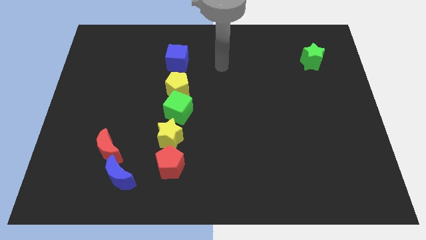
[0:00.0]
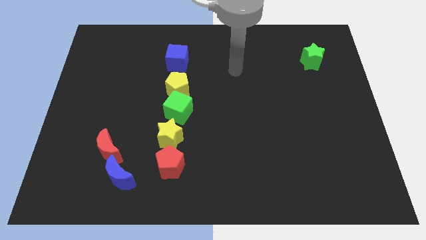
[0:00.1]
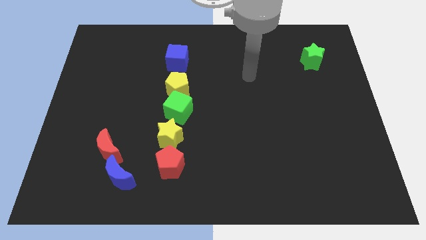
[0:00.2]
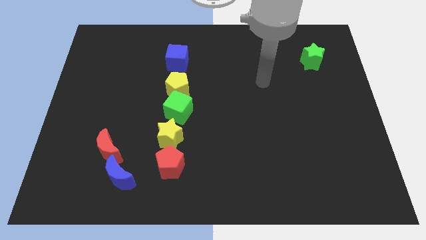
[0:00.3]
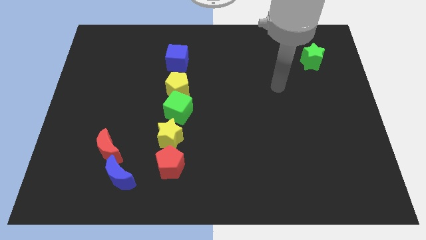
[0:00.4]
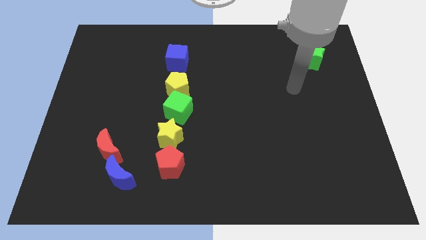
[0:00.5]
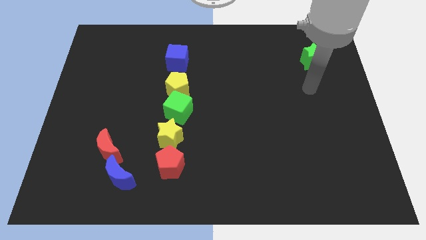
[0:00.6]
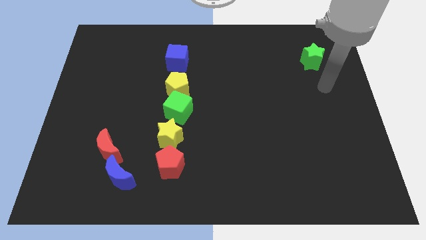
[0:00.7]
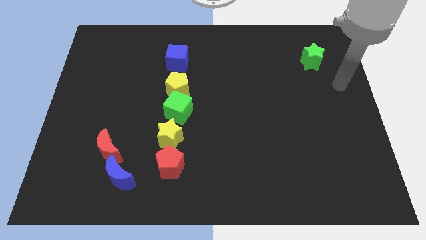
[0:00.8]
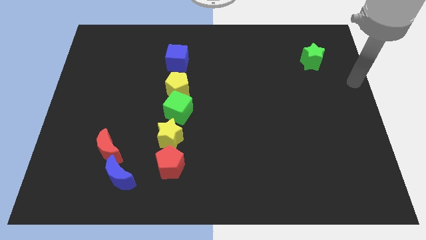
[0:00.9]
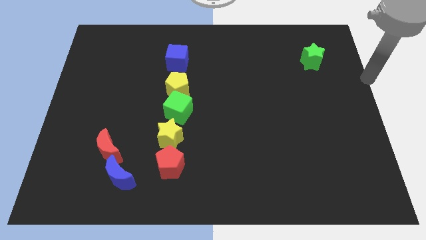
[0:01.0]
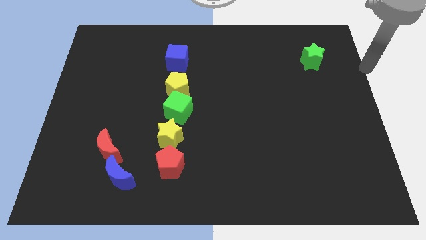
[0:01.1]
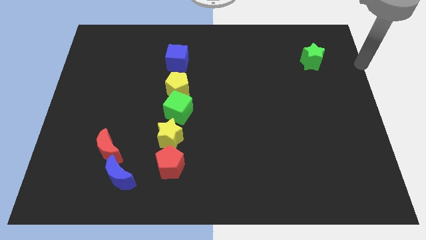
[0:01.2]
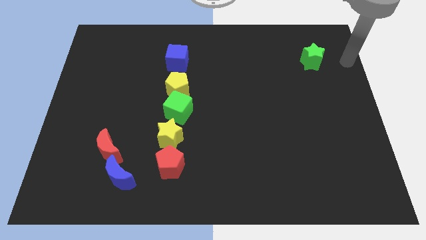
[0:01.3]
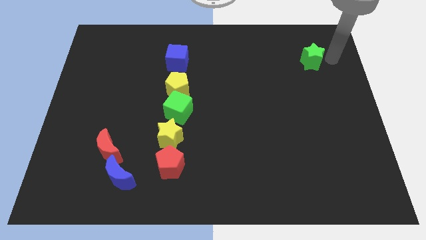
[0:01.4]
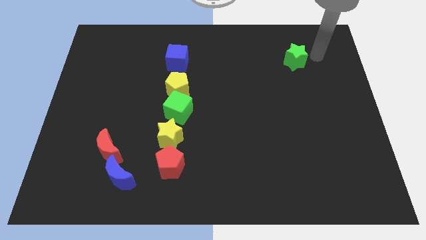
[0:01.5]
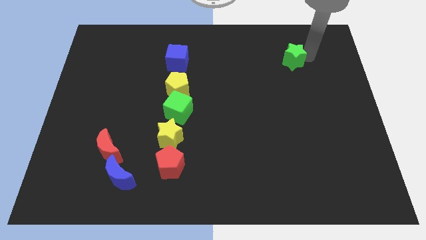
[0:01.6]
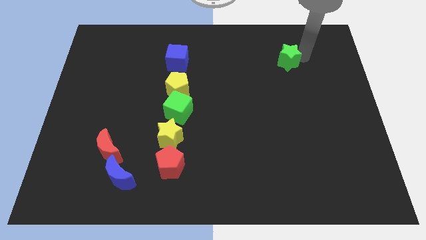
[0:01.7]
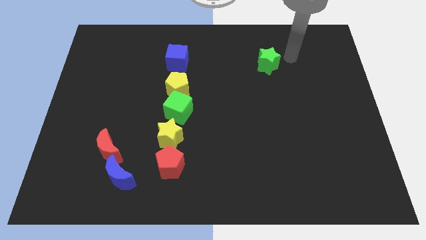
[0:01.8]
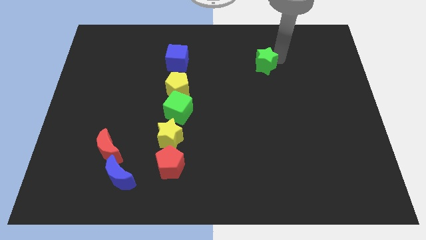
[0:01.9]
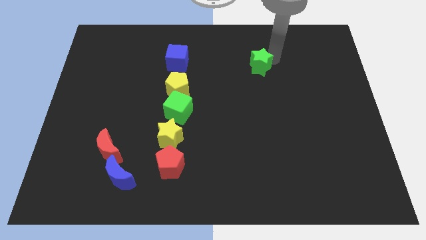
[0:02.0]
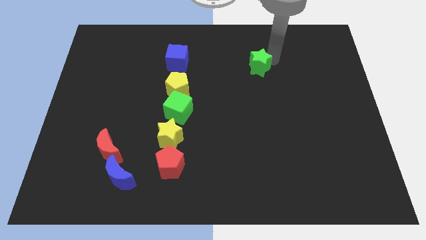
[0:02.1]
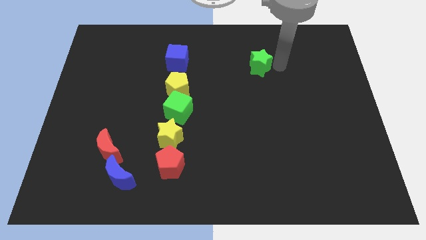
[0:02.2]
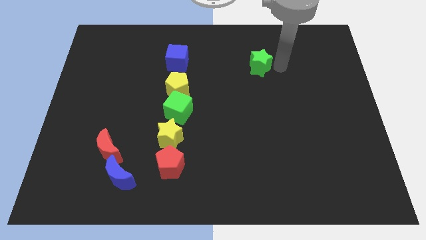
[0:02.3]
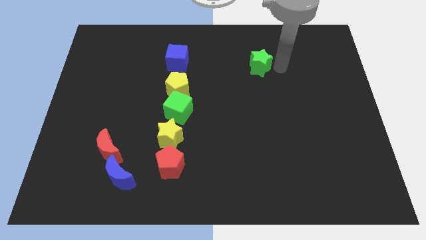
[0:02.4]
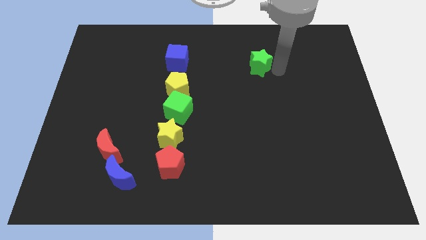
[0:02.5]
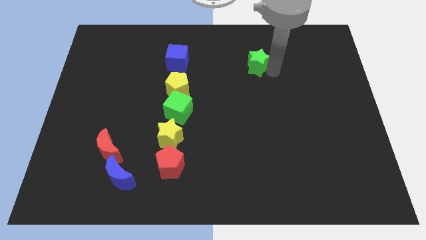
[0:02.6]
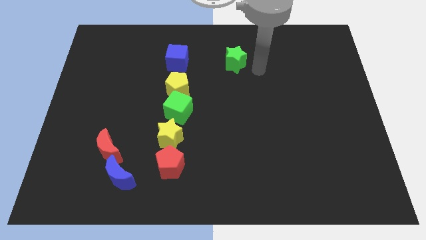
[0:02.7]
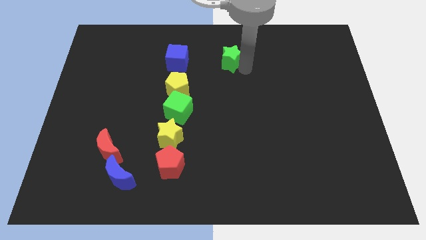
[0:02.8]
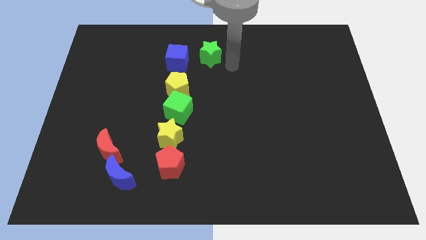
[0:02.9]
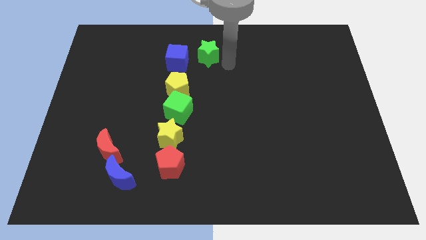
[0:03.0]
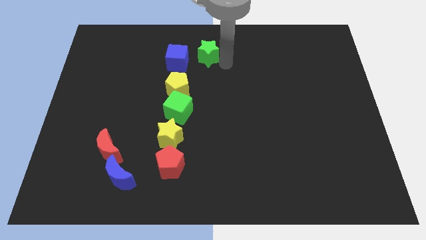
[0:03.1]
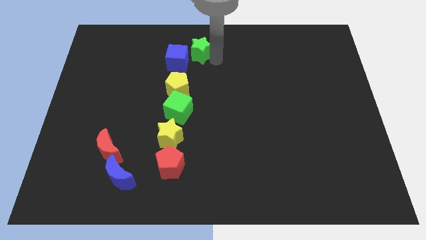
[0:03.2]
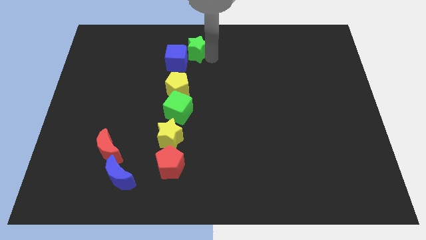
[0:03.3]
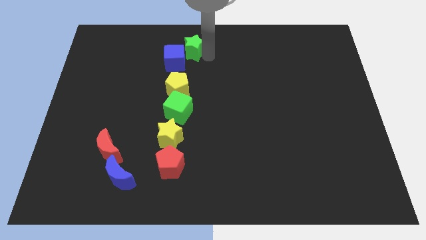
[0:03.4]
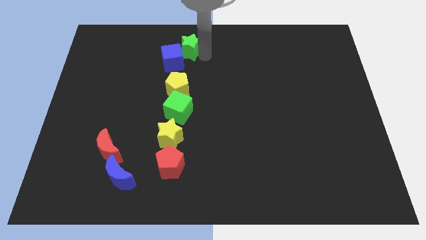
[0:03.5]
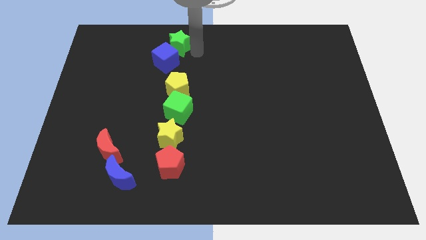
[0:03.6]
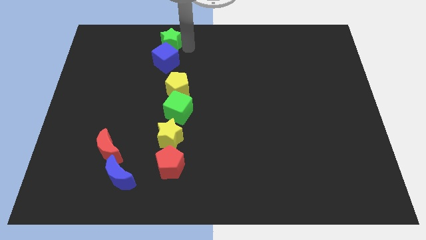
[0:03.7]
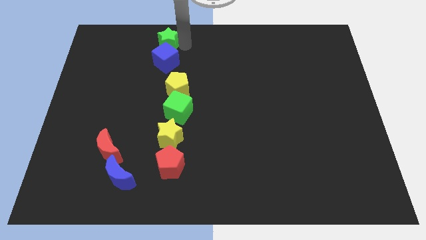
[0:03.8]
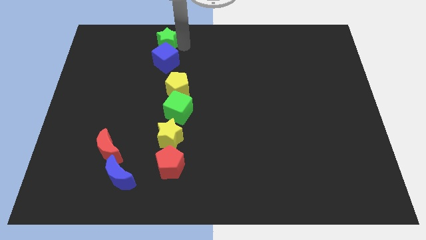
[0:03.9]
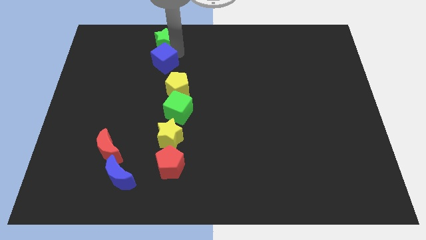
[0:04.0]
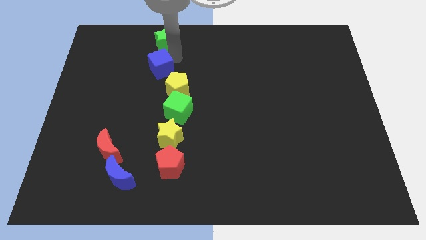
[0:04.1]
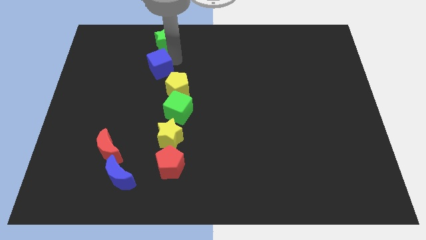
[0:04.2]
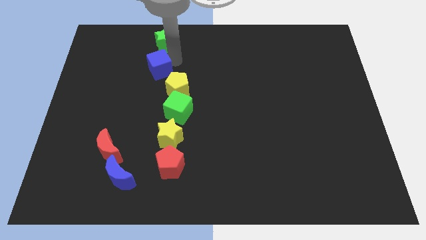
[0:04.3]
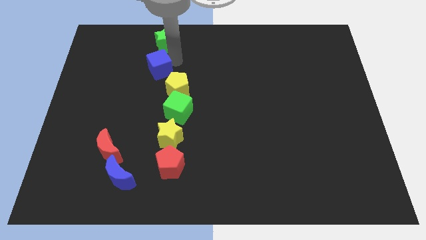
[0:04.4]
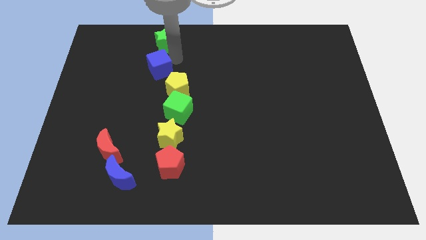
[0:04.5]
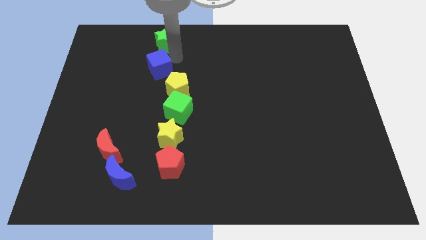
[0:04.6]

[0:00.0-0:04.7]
place the green star above the blue cube

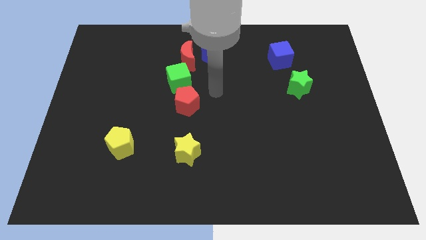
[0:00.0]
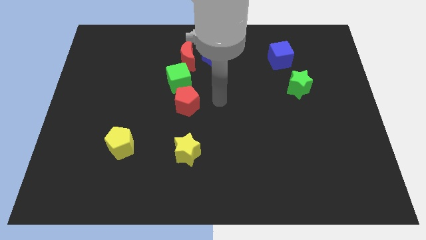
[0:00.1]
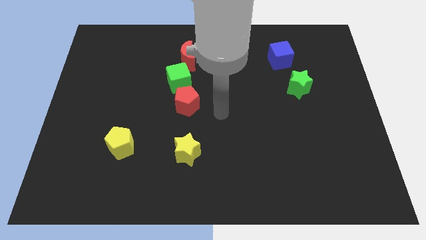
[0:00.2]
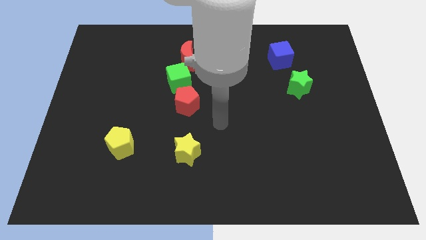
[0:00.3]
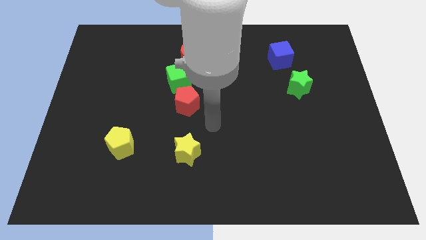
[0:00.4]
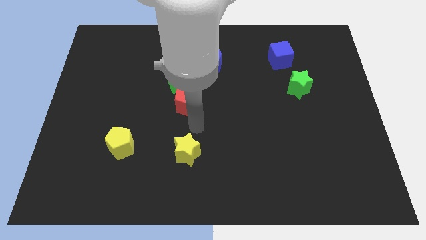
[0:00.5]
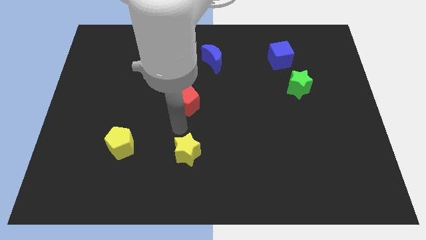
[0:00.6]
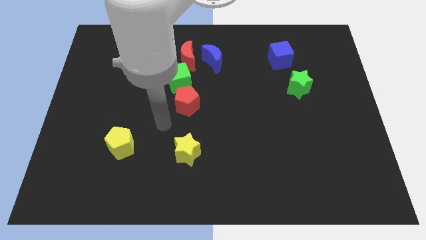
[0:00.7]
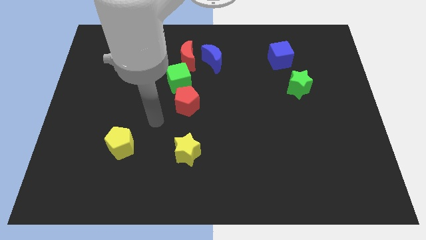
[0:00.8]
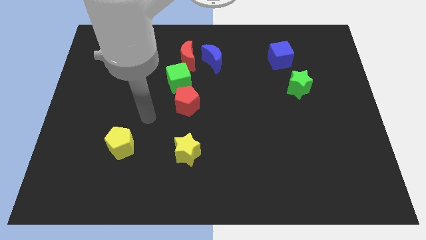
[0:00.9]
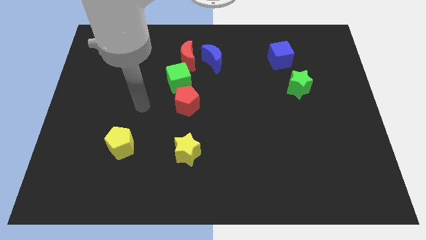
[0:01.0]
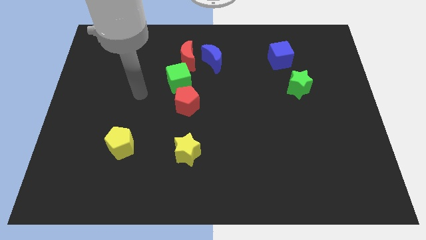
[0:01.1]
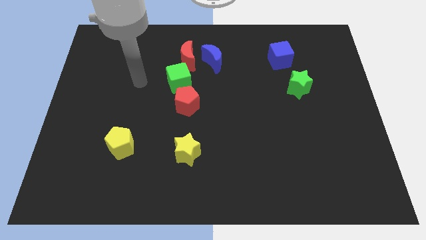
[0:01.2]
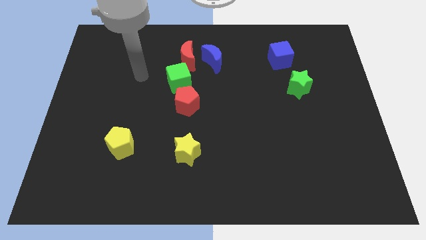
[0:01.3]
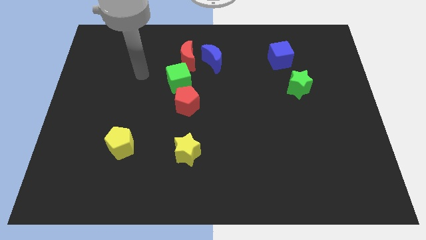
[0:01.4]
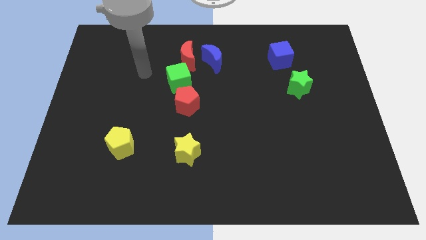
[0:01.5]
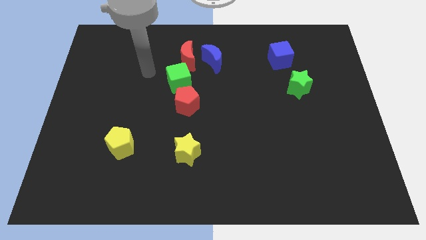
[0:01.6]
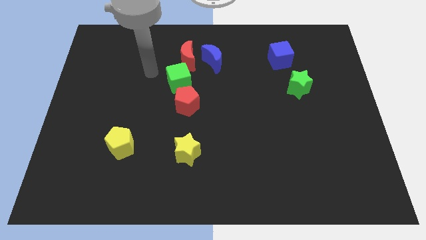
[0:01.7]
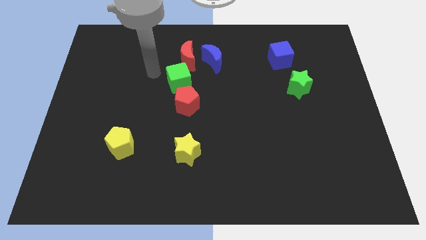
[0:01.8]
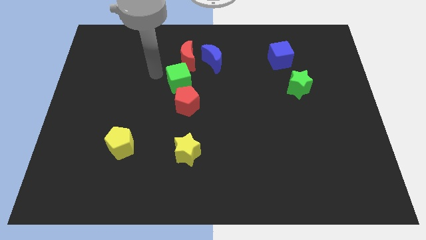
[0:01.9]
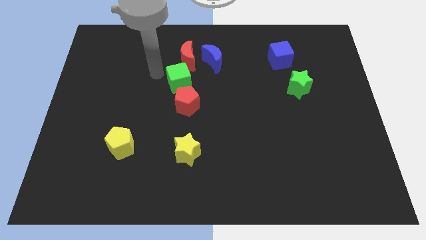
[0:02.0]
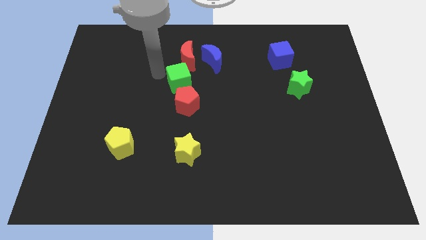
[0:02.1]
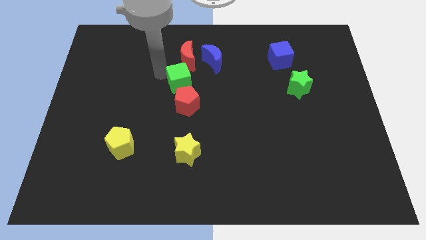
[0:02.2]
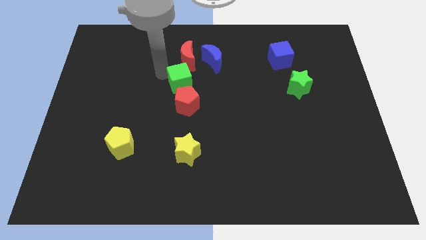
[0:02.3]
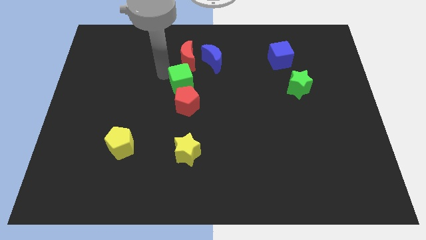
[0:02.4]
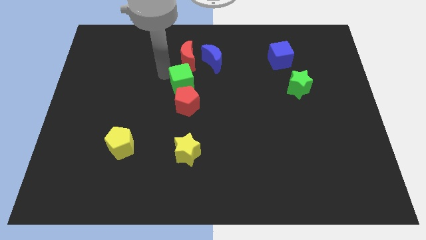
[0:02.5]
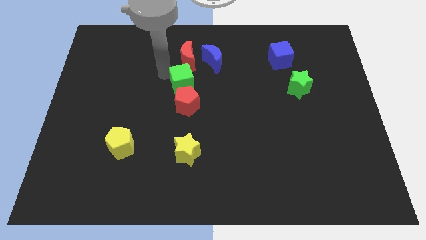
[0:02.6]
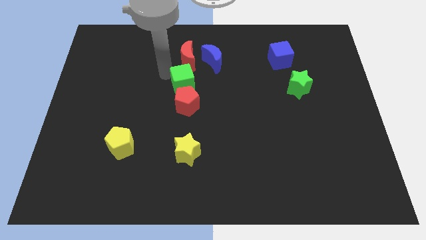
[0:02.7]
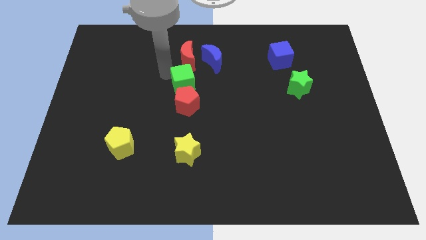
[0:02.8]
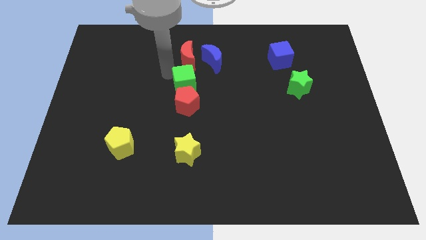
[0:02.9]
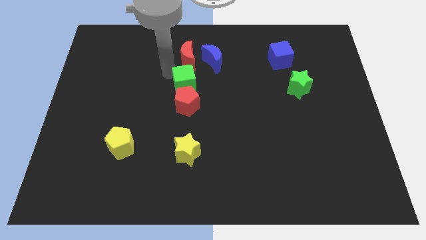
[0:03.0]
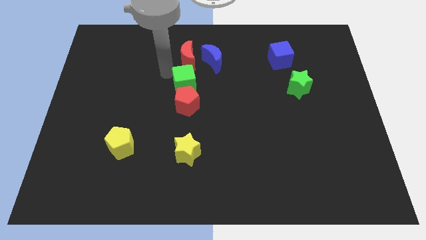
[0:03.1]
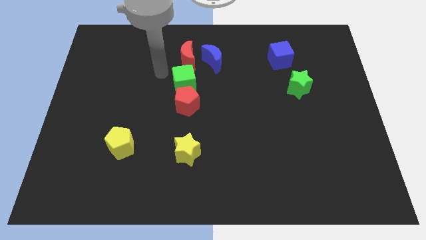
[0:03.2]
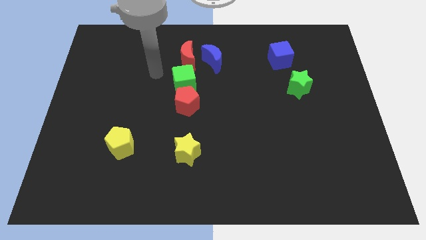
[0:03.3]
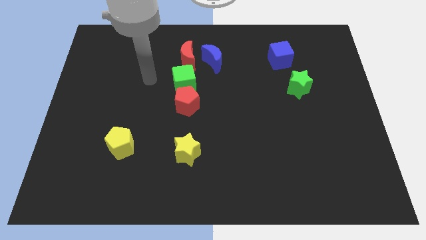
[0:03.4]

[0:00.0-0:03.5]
push the green cube in between the red pentagon and red crescent

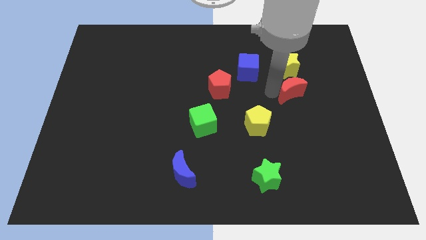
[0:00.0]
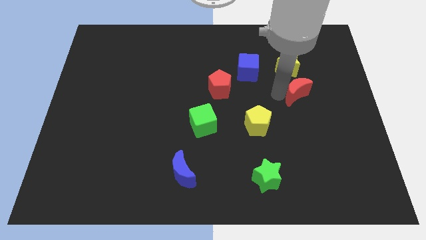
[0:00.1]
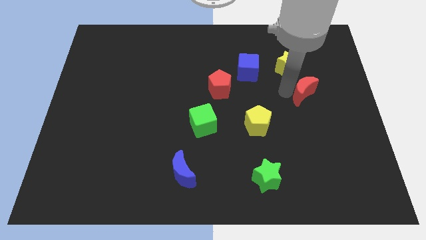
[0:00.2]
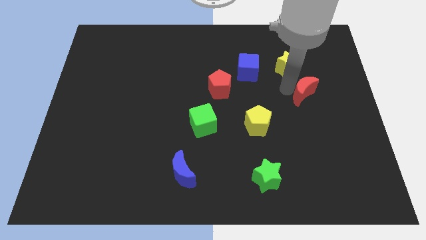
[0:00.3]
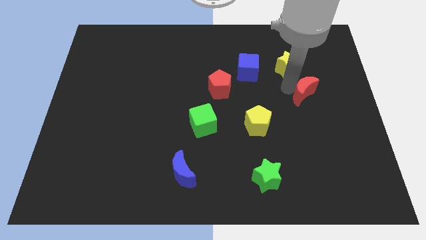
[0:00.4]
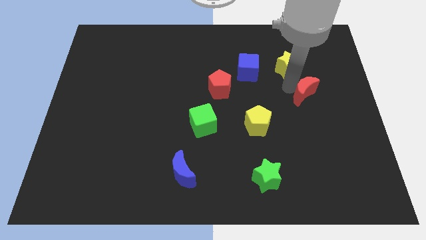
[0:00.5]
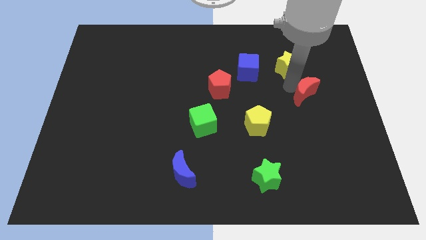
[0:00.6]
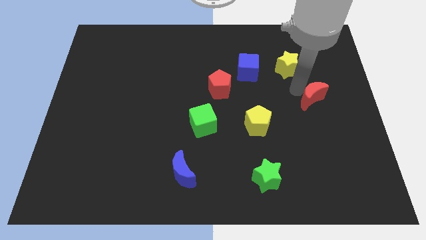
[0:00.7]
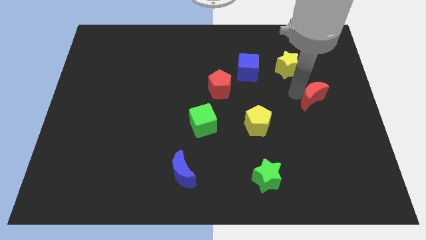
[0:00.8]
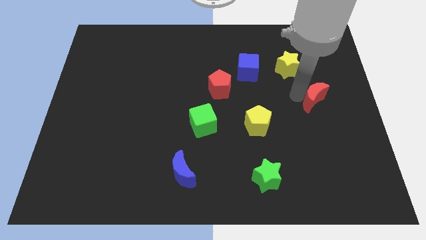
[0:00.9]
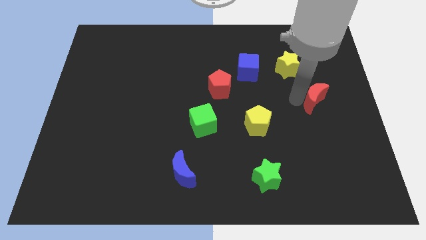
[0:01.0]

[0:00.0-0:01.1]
slightly move the red moon to the right
